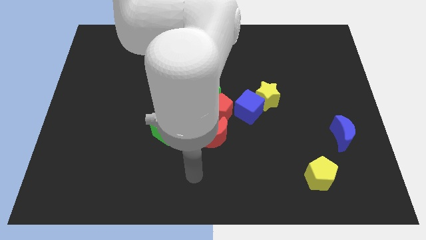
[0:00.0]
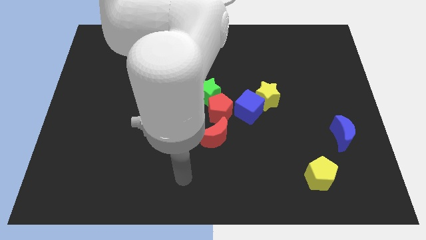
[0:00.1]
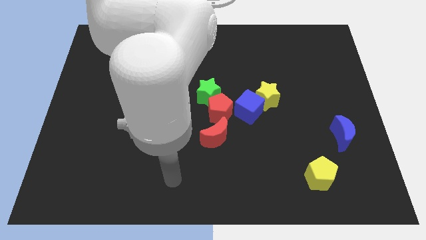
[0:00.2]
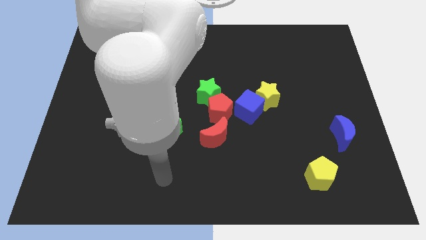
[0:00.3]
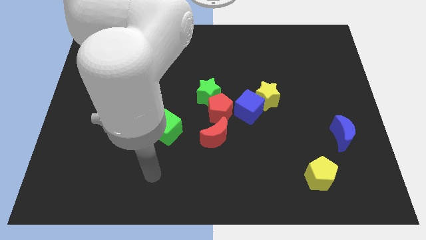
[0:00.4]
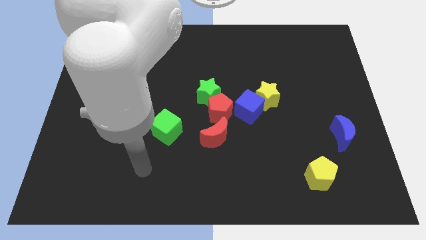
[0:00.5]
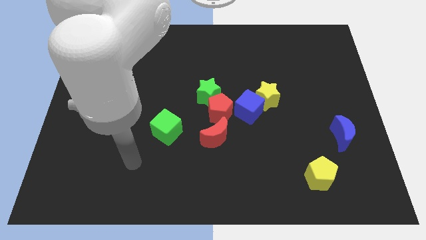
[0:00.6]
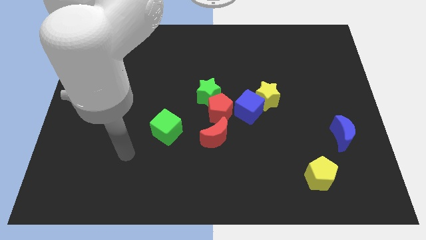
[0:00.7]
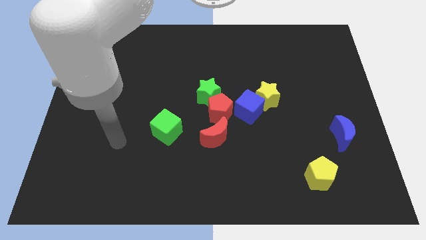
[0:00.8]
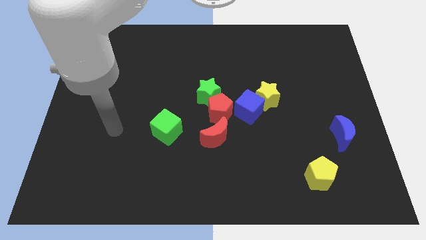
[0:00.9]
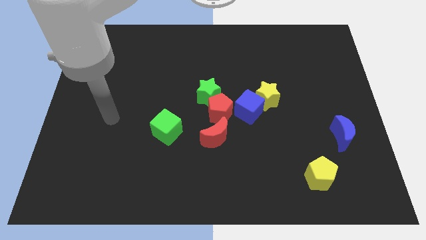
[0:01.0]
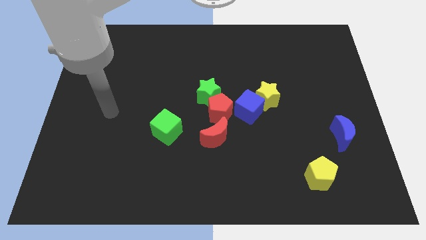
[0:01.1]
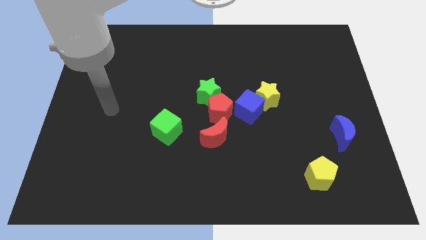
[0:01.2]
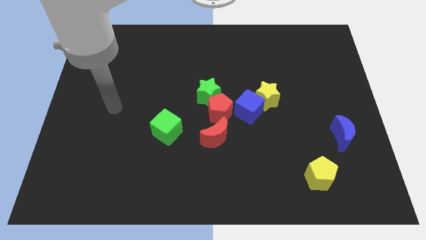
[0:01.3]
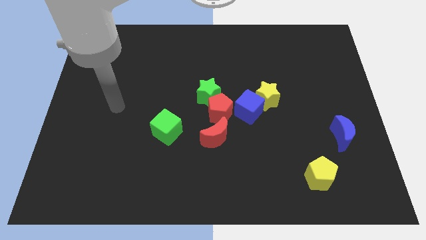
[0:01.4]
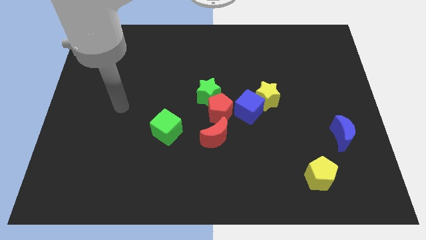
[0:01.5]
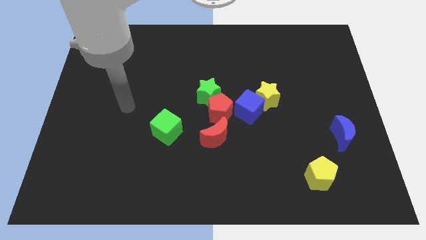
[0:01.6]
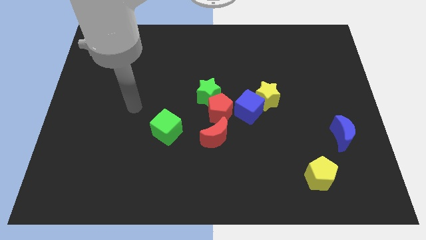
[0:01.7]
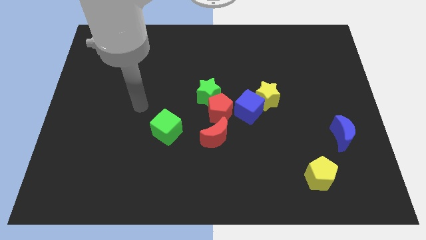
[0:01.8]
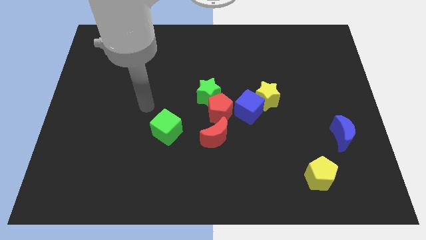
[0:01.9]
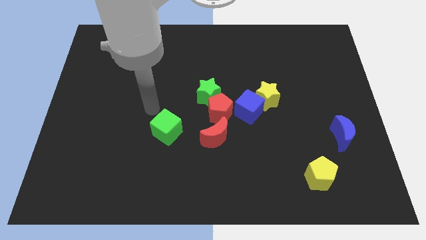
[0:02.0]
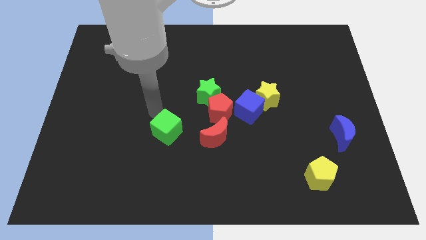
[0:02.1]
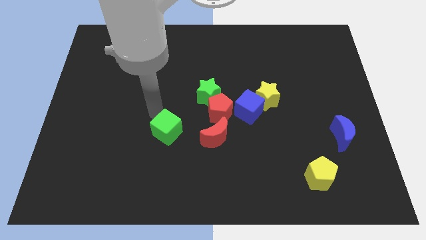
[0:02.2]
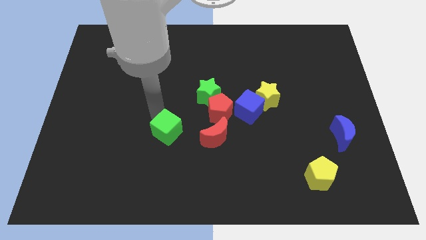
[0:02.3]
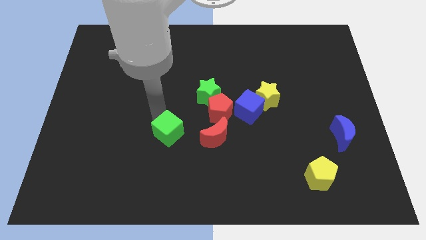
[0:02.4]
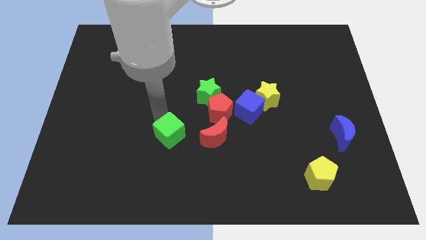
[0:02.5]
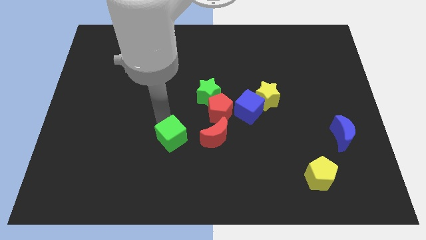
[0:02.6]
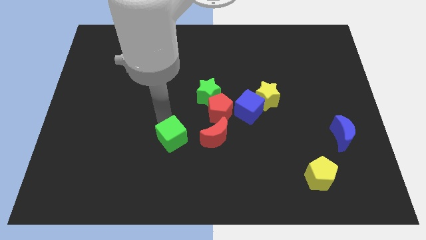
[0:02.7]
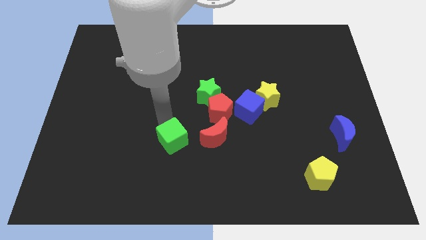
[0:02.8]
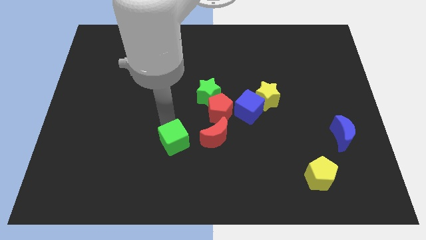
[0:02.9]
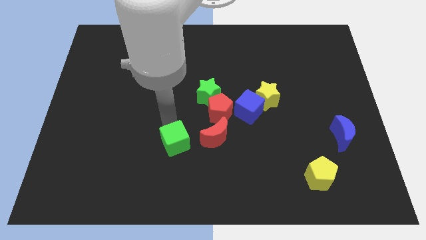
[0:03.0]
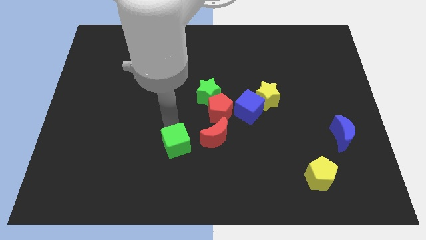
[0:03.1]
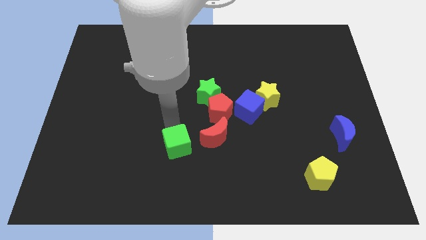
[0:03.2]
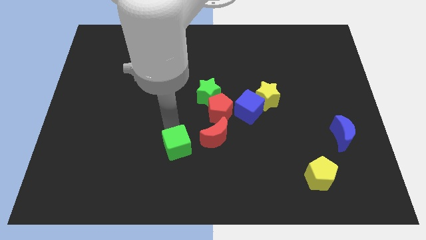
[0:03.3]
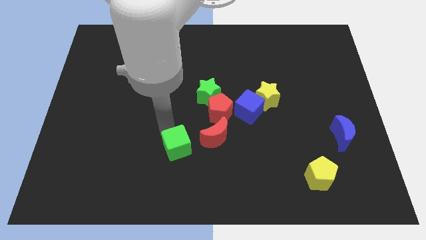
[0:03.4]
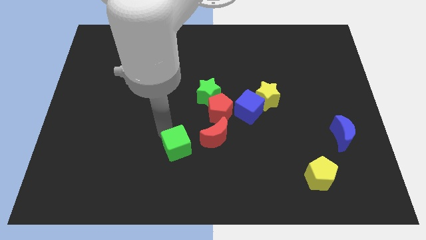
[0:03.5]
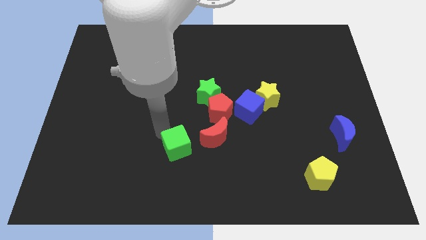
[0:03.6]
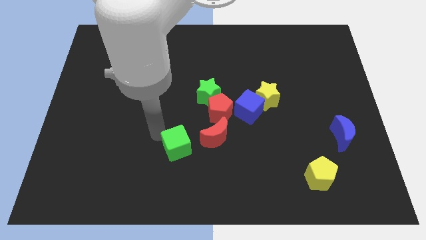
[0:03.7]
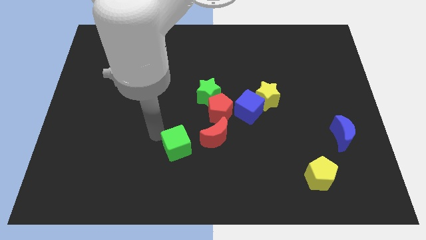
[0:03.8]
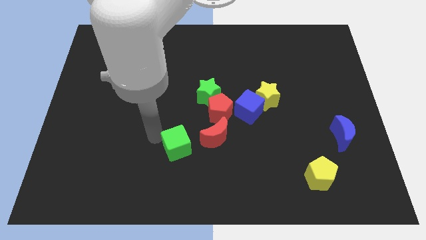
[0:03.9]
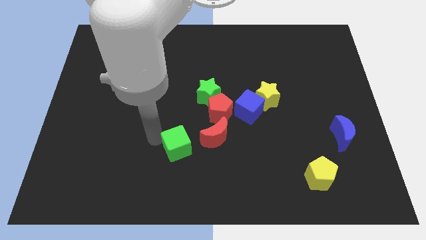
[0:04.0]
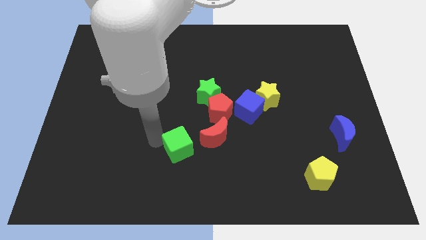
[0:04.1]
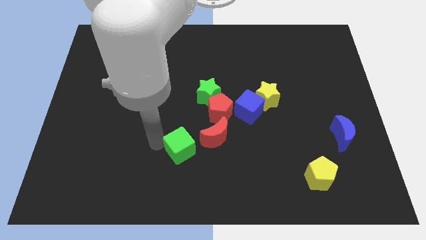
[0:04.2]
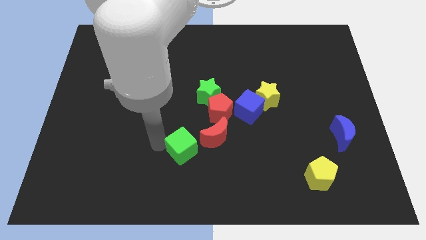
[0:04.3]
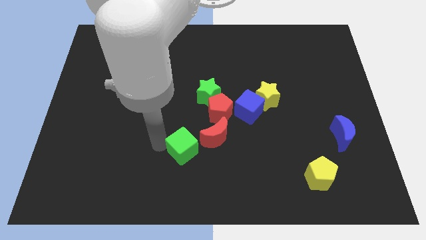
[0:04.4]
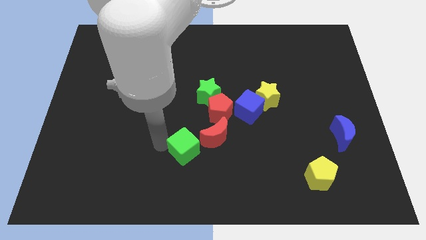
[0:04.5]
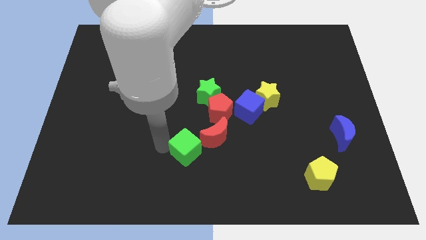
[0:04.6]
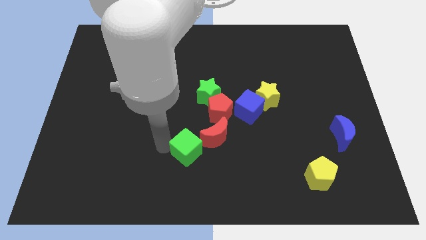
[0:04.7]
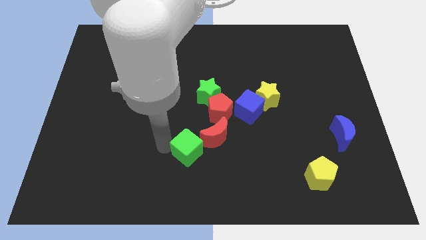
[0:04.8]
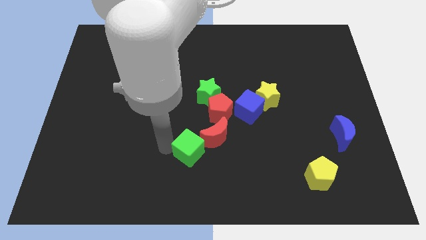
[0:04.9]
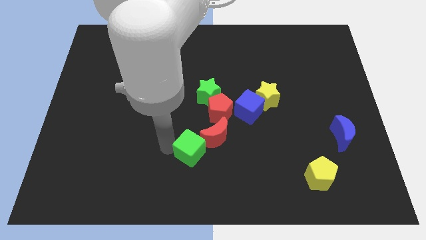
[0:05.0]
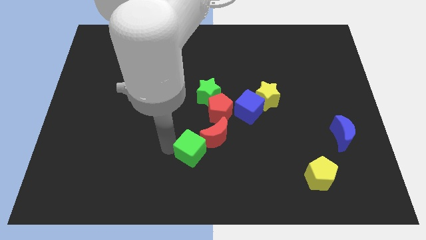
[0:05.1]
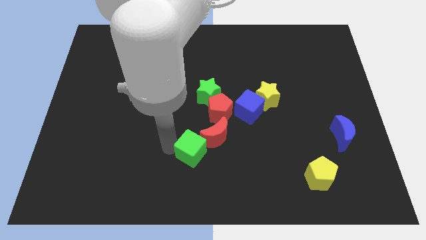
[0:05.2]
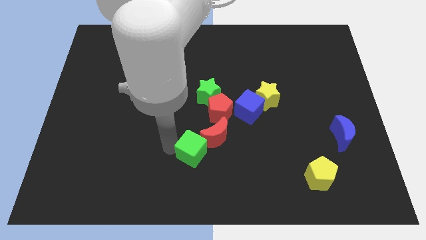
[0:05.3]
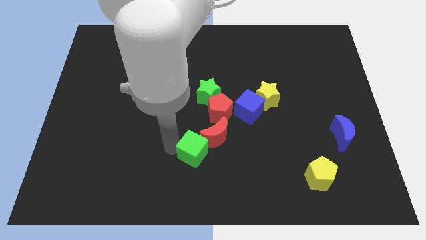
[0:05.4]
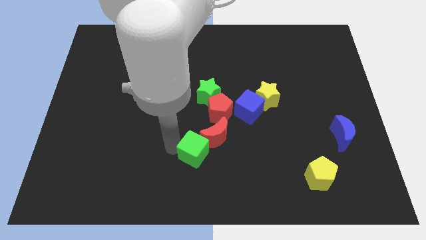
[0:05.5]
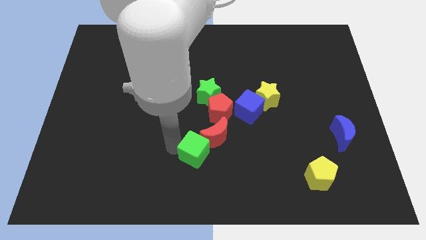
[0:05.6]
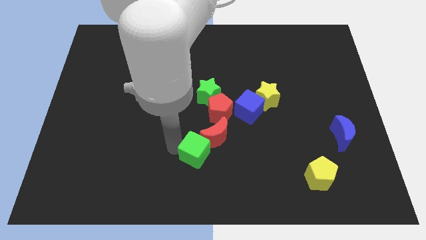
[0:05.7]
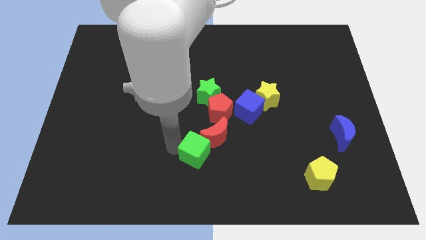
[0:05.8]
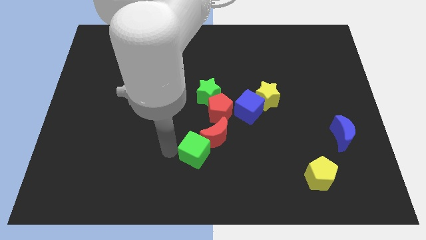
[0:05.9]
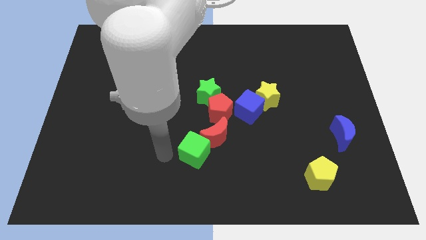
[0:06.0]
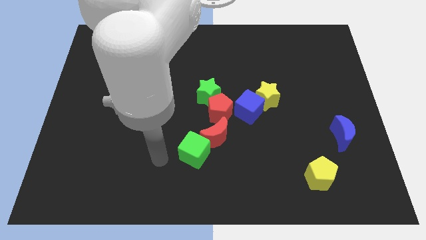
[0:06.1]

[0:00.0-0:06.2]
push the green cube to the bottom of the red crescent

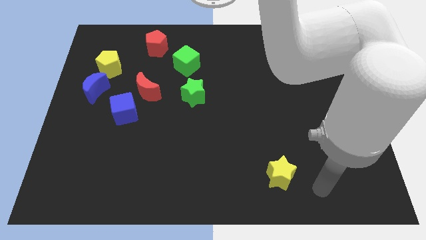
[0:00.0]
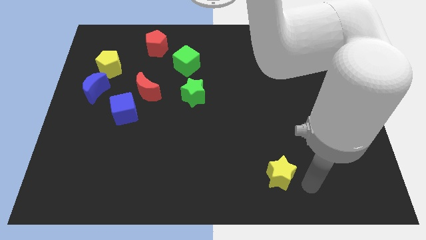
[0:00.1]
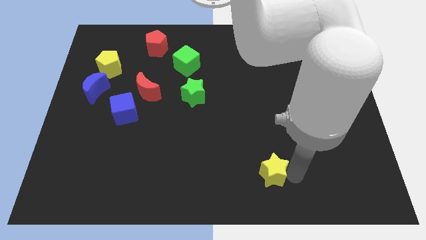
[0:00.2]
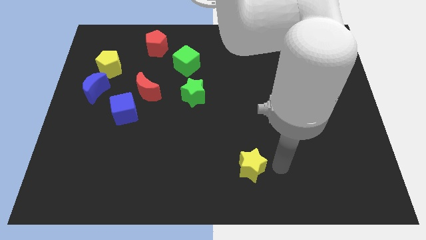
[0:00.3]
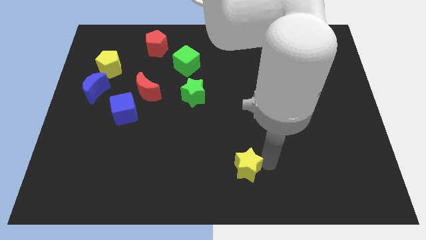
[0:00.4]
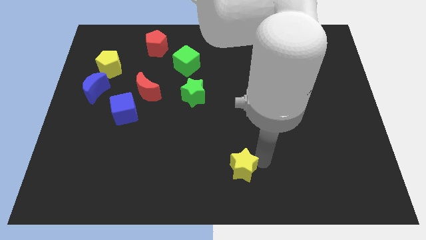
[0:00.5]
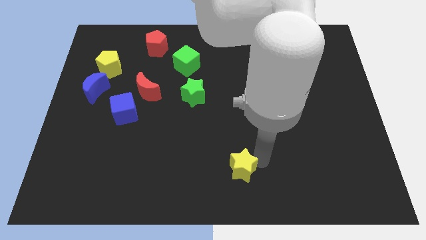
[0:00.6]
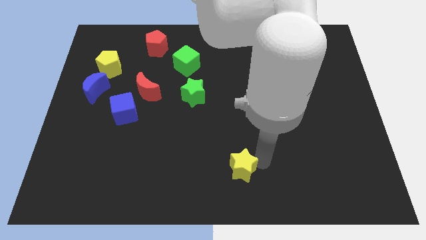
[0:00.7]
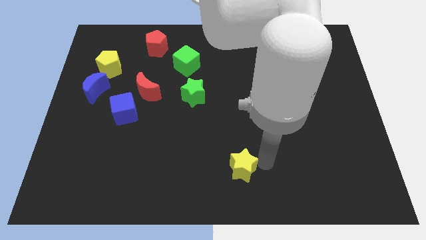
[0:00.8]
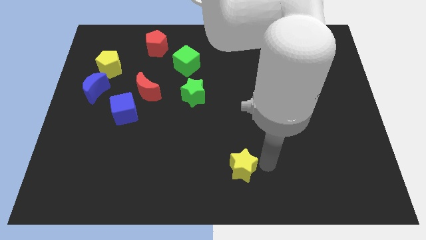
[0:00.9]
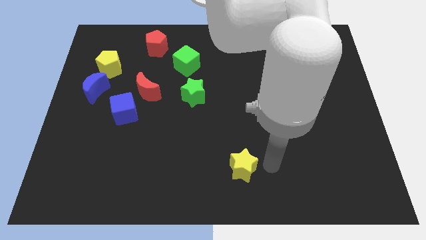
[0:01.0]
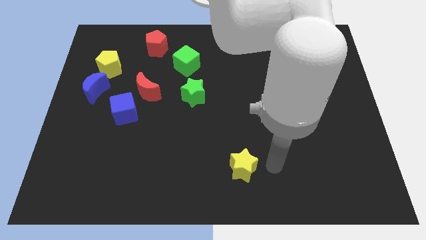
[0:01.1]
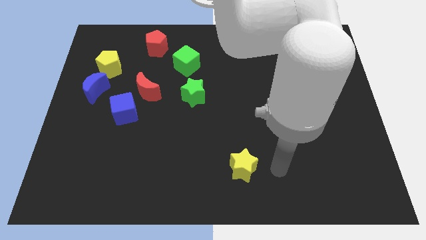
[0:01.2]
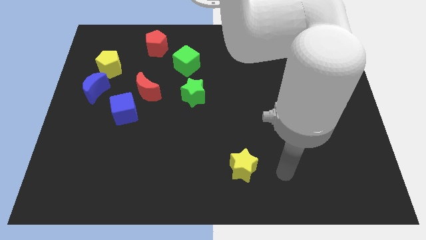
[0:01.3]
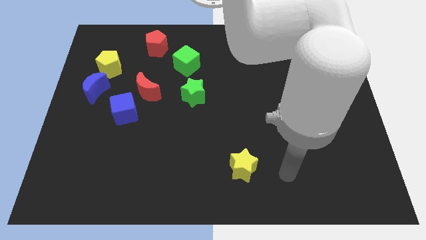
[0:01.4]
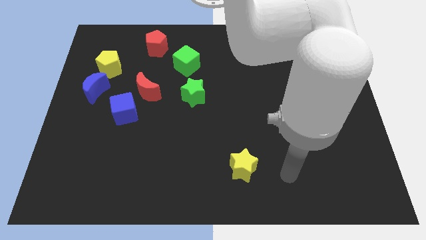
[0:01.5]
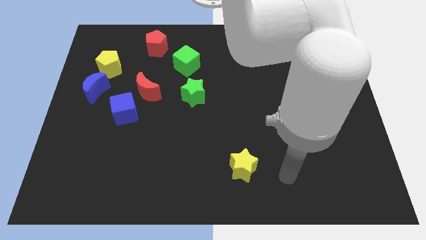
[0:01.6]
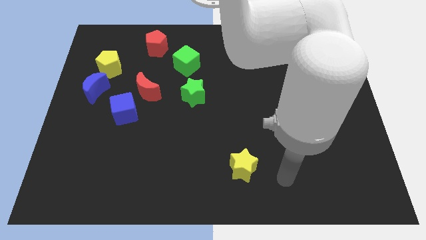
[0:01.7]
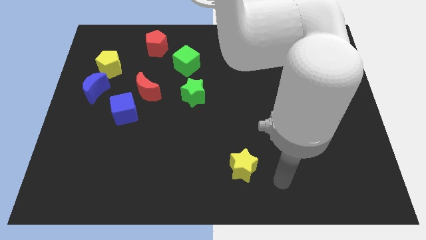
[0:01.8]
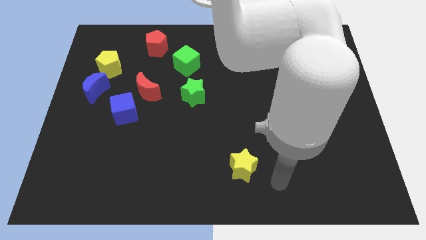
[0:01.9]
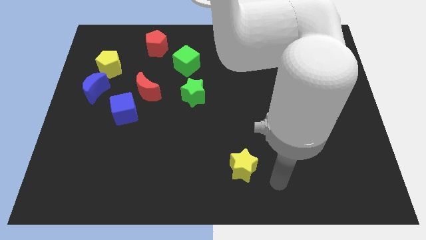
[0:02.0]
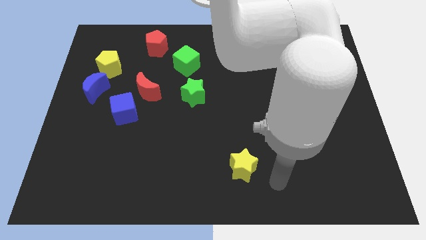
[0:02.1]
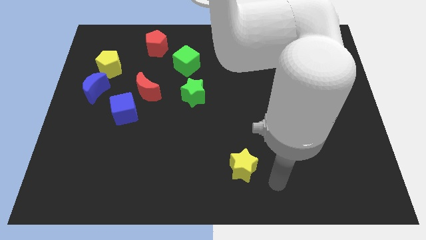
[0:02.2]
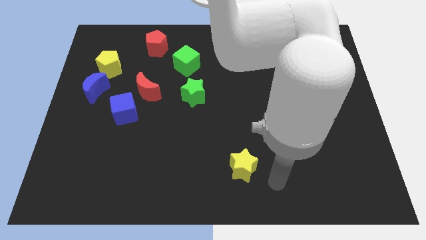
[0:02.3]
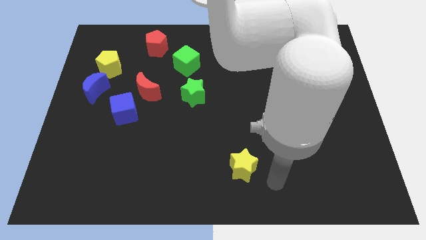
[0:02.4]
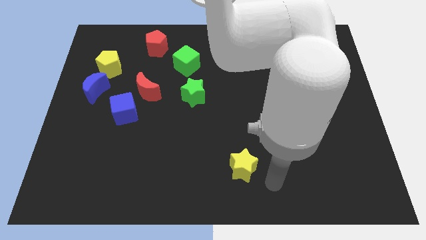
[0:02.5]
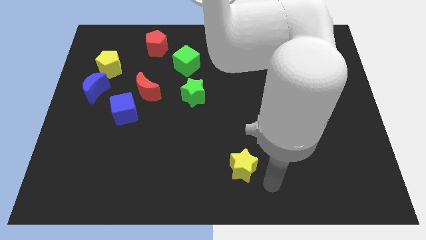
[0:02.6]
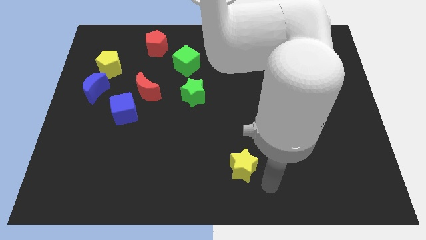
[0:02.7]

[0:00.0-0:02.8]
push the yellow star diagonal to green star
